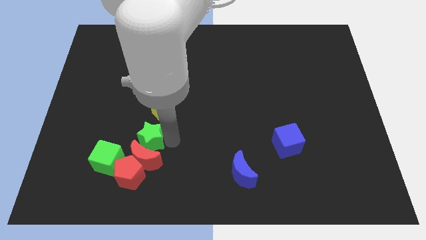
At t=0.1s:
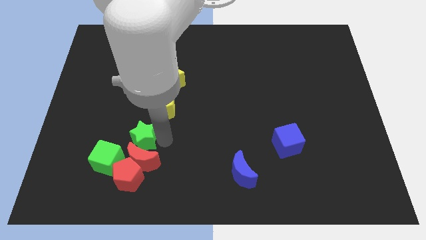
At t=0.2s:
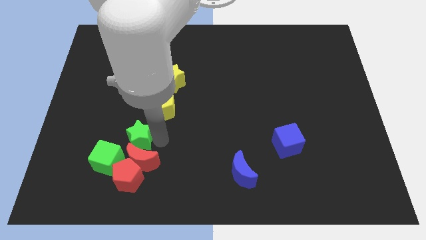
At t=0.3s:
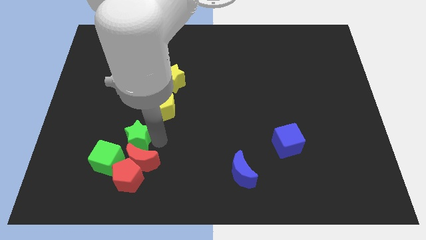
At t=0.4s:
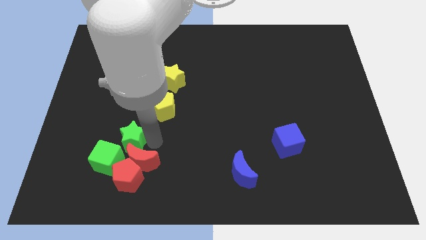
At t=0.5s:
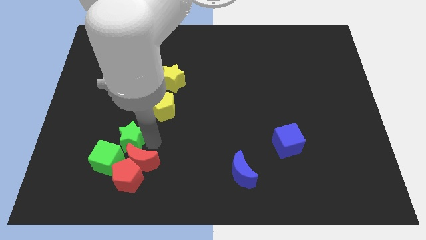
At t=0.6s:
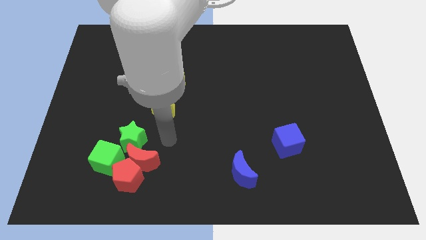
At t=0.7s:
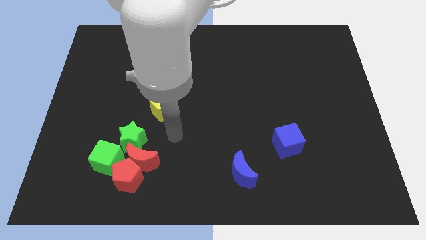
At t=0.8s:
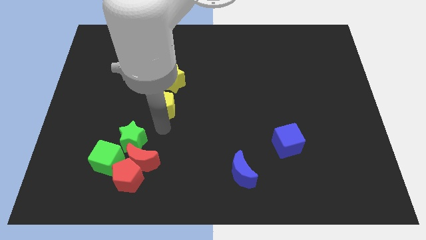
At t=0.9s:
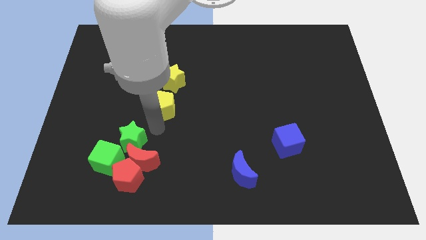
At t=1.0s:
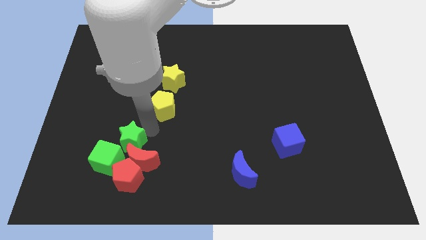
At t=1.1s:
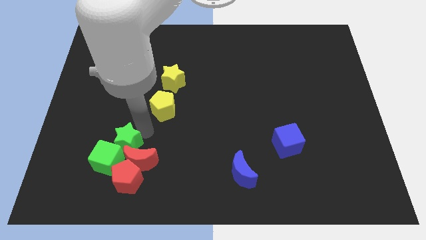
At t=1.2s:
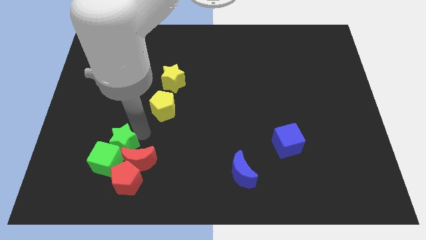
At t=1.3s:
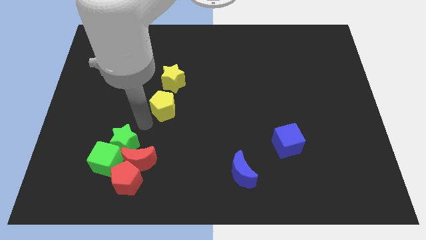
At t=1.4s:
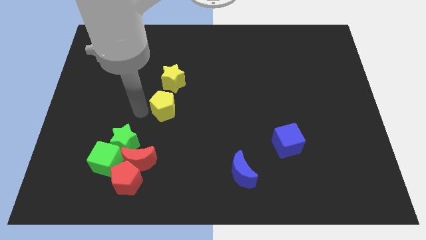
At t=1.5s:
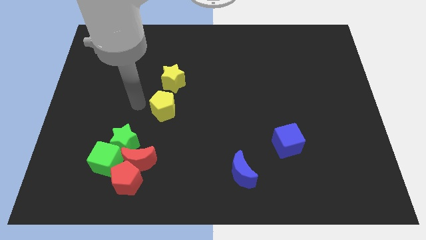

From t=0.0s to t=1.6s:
push the green star to the top right of the green cube

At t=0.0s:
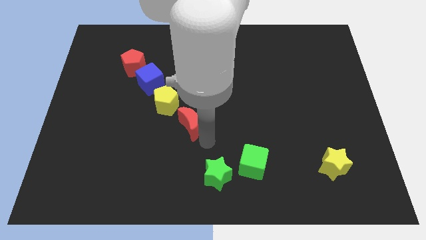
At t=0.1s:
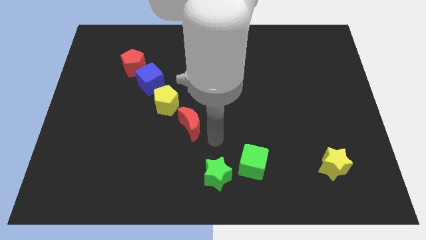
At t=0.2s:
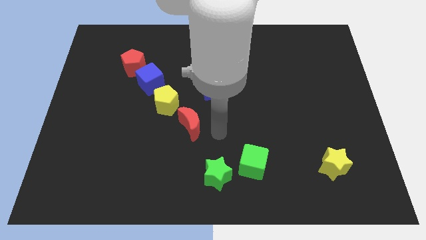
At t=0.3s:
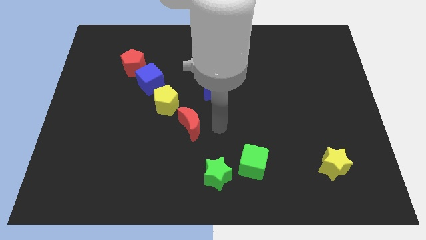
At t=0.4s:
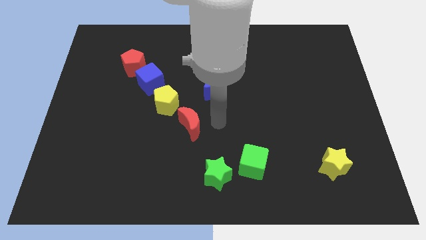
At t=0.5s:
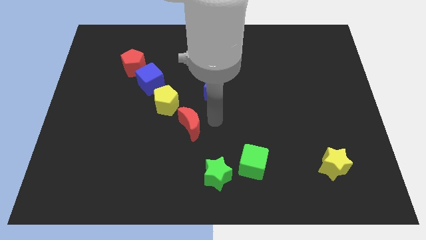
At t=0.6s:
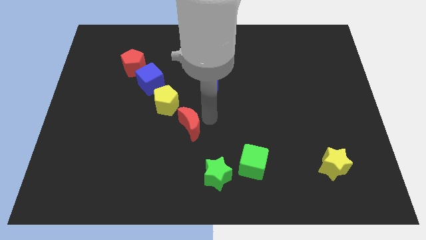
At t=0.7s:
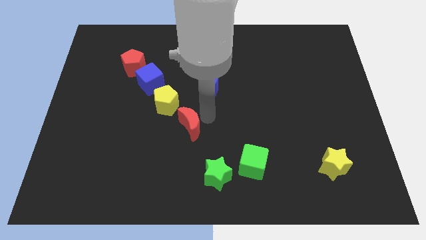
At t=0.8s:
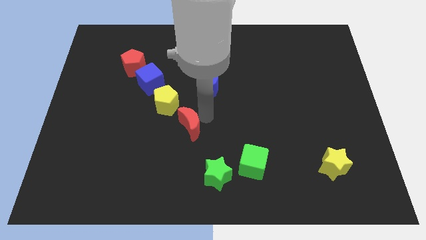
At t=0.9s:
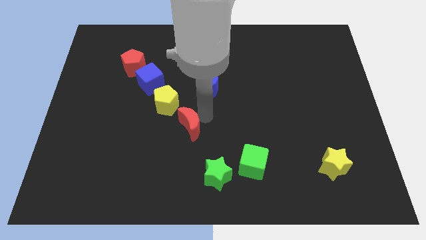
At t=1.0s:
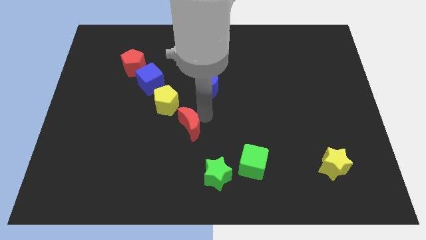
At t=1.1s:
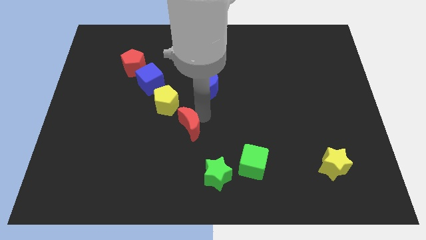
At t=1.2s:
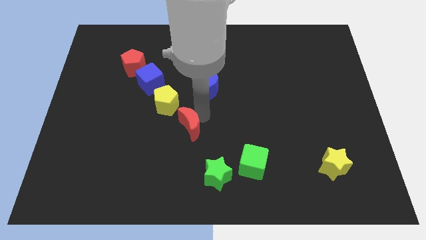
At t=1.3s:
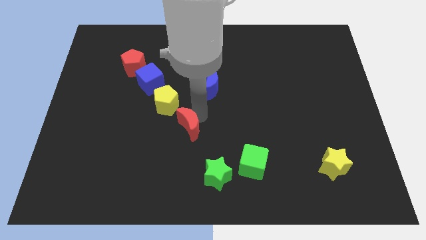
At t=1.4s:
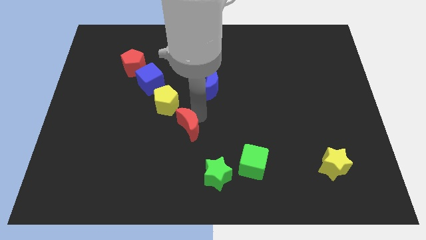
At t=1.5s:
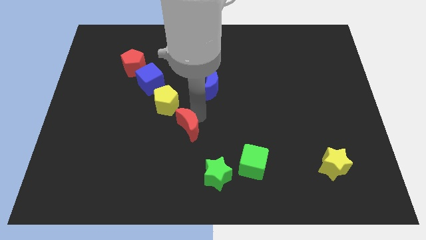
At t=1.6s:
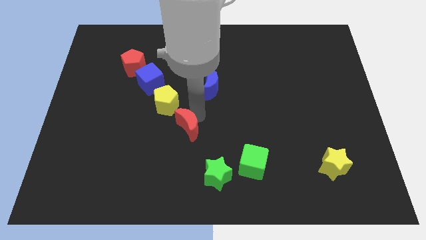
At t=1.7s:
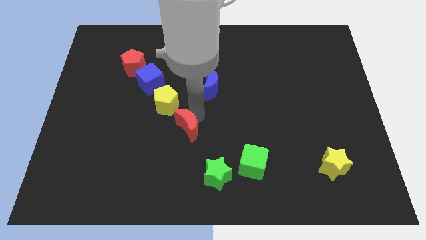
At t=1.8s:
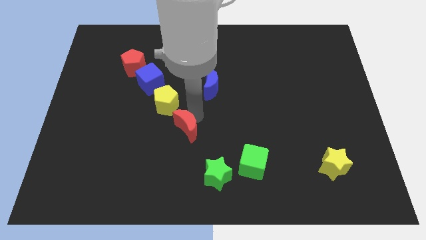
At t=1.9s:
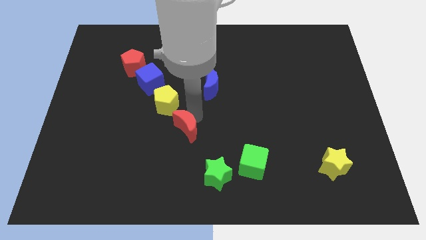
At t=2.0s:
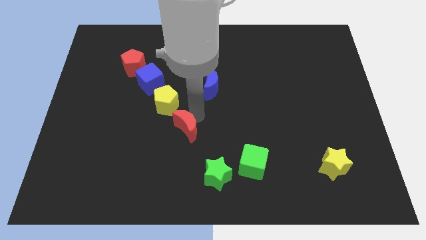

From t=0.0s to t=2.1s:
place the red crescent diagonally below the yellow pentagon

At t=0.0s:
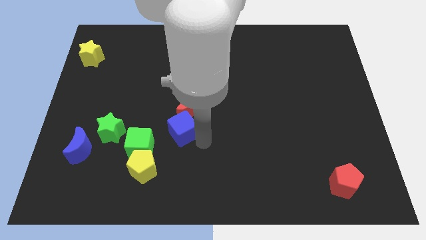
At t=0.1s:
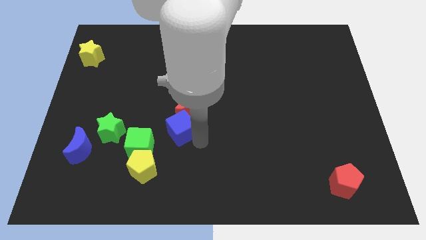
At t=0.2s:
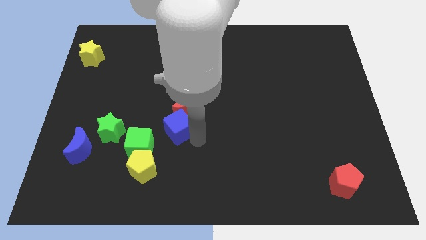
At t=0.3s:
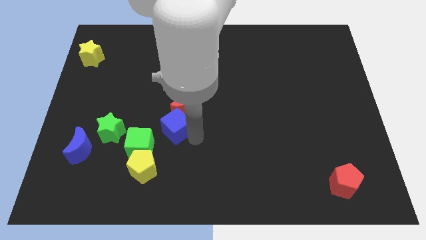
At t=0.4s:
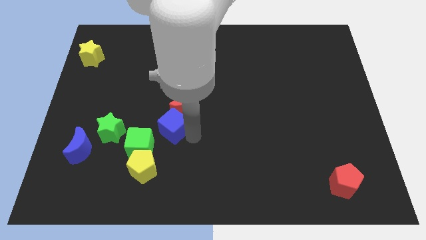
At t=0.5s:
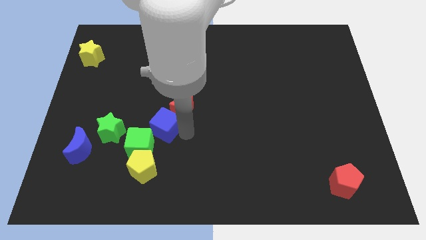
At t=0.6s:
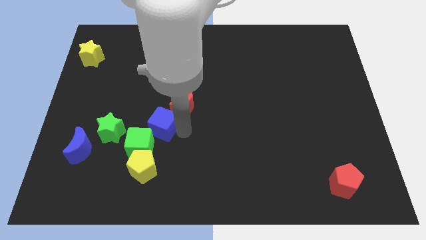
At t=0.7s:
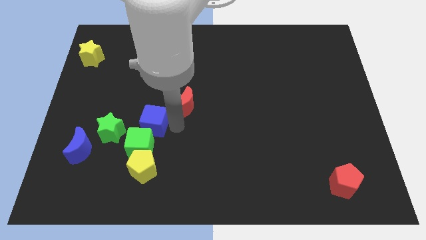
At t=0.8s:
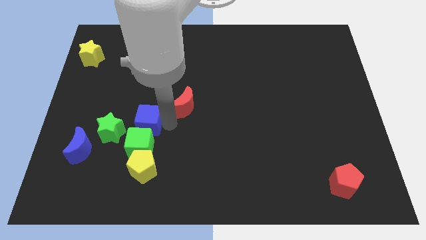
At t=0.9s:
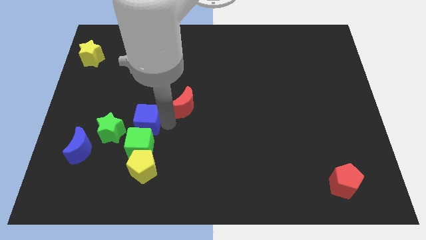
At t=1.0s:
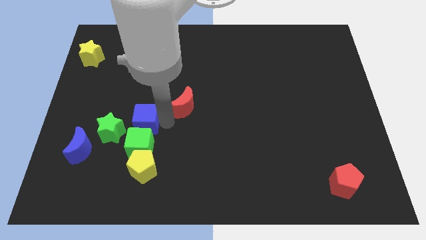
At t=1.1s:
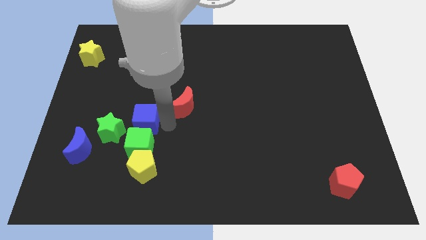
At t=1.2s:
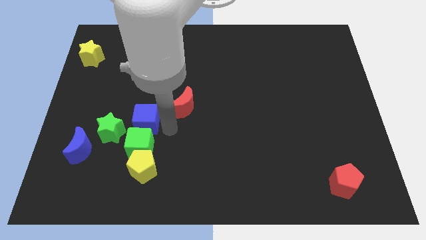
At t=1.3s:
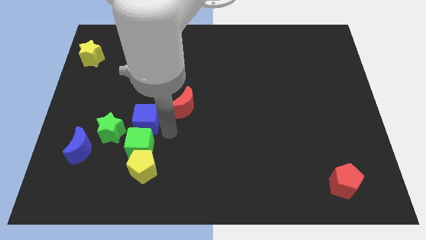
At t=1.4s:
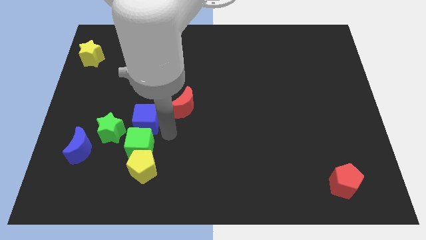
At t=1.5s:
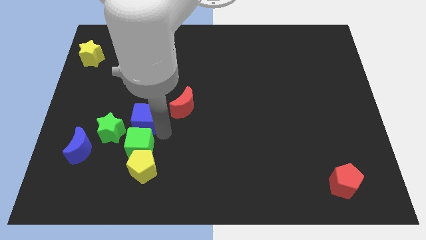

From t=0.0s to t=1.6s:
push the blue cube to the top of the green cube

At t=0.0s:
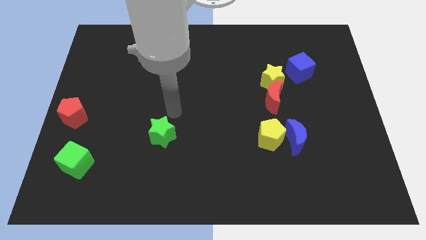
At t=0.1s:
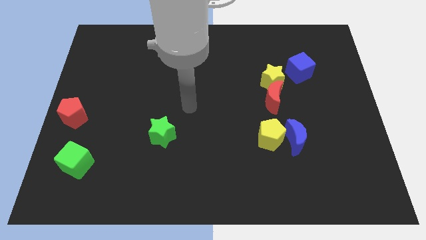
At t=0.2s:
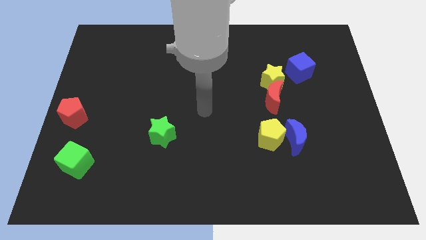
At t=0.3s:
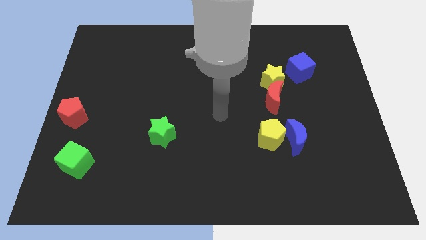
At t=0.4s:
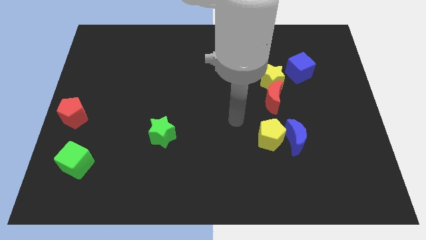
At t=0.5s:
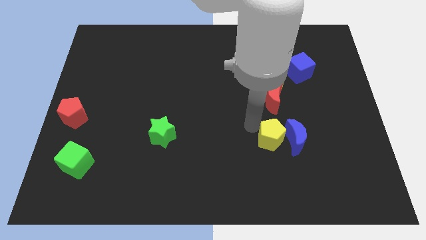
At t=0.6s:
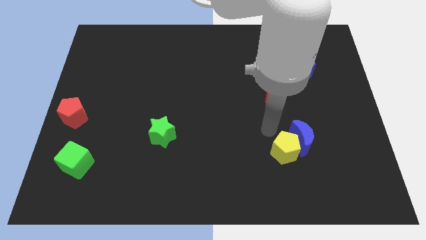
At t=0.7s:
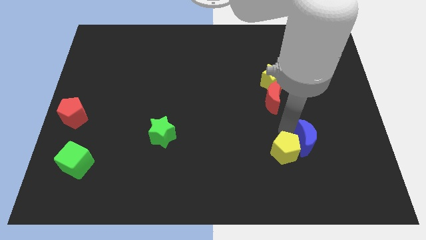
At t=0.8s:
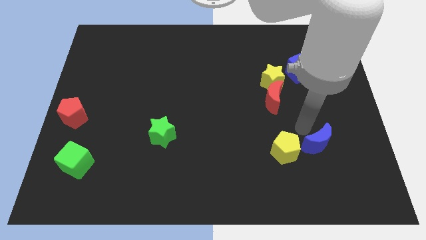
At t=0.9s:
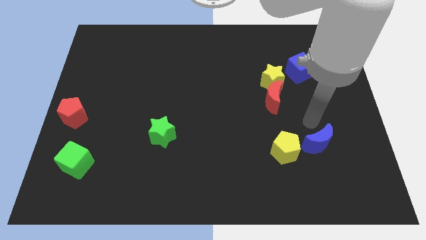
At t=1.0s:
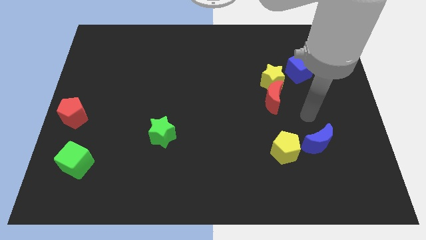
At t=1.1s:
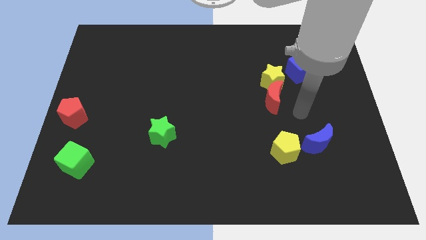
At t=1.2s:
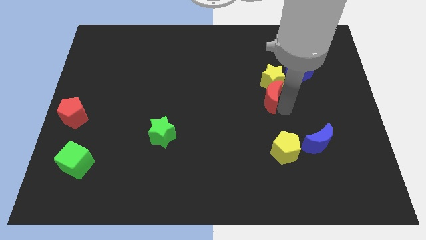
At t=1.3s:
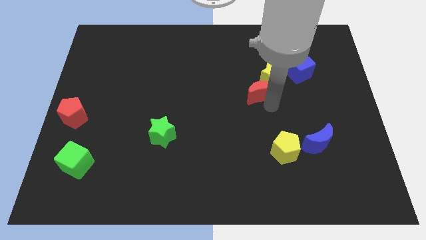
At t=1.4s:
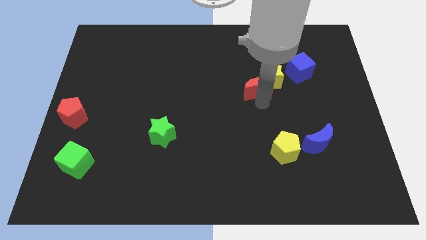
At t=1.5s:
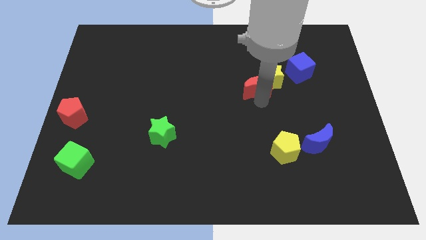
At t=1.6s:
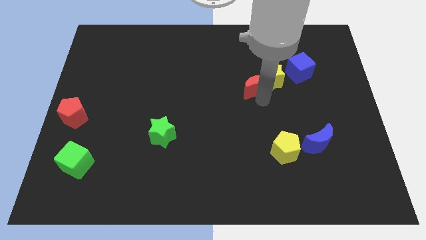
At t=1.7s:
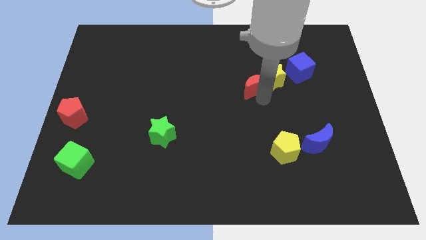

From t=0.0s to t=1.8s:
push the yellow pentagon into the blue crescent

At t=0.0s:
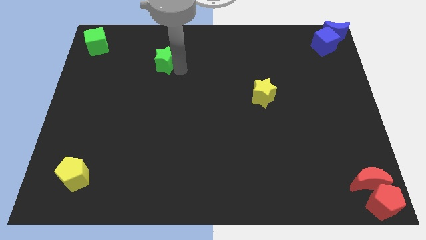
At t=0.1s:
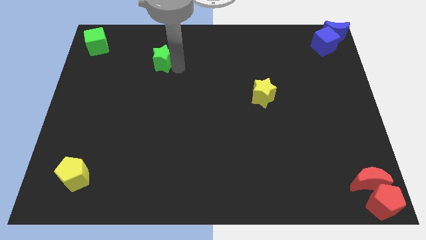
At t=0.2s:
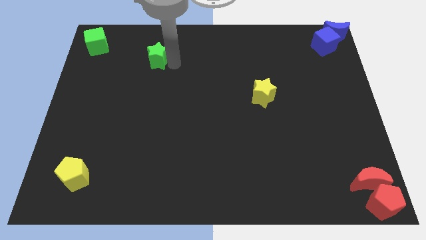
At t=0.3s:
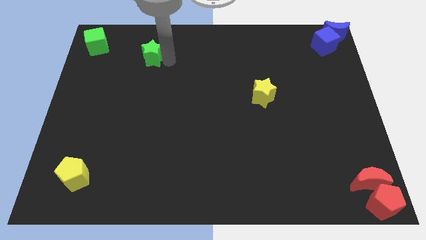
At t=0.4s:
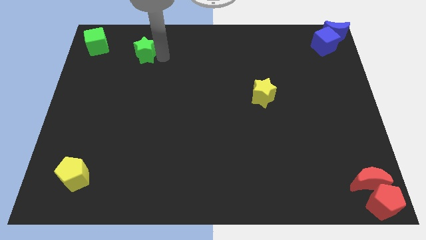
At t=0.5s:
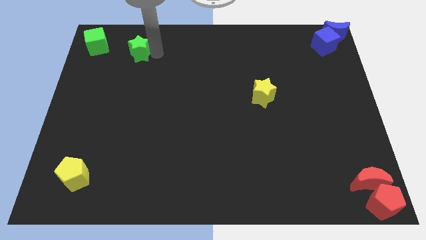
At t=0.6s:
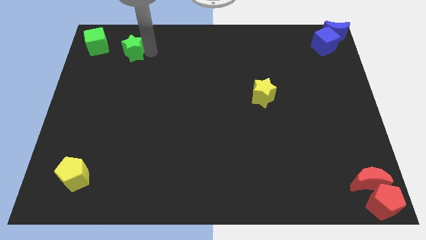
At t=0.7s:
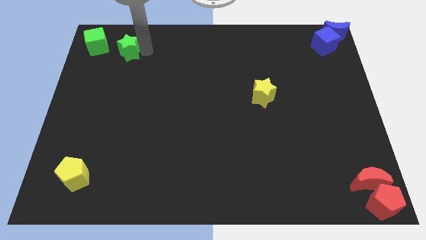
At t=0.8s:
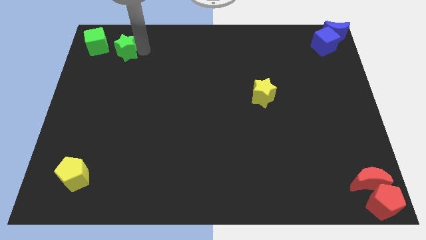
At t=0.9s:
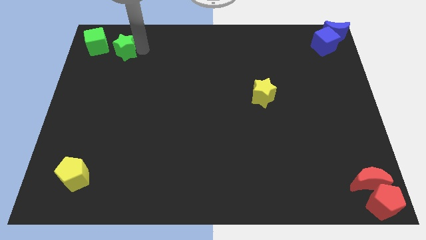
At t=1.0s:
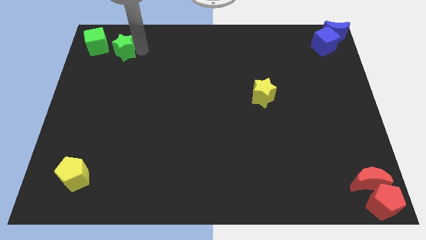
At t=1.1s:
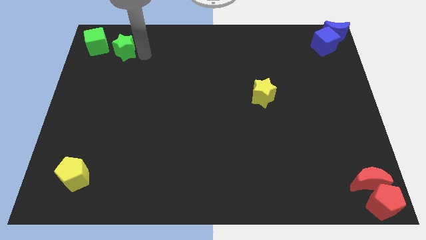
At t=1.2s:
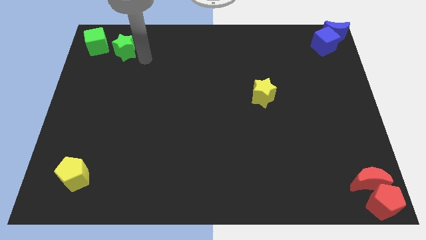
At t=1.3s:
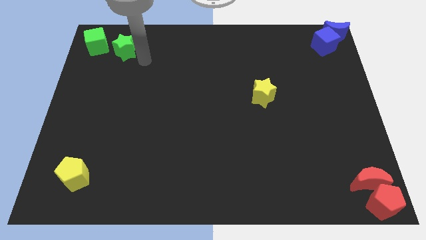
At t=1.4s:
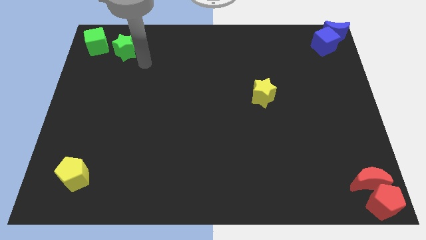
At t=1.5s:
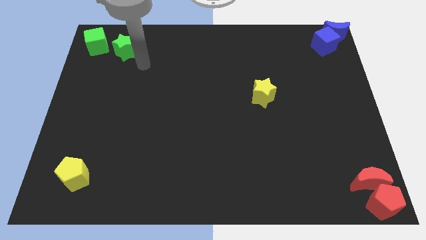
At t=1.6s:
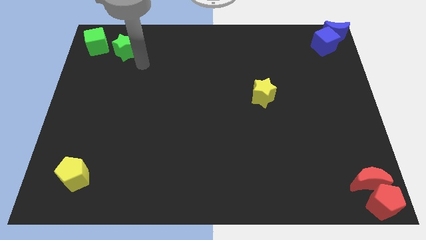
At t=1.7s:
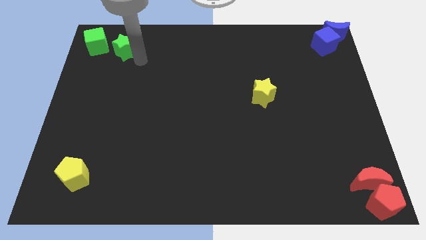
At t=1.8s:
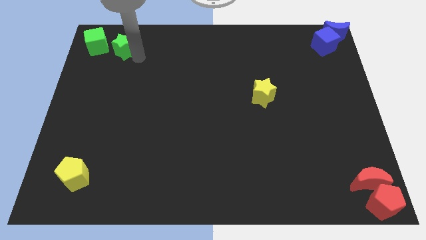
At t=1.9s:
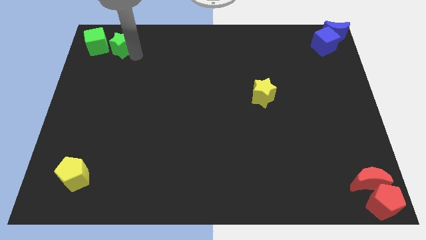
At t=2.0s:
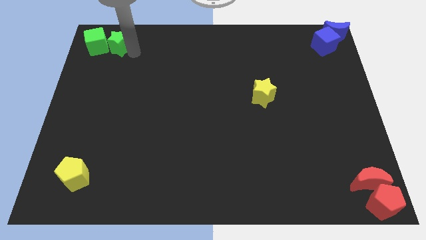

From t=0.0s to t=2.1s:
push the green star right to the green cube
